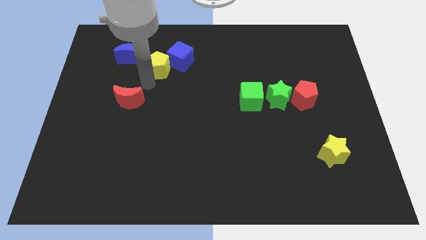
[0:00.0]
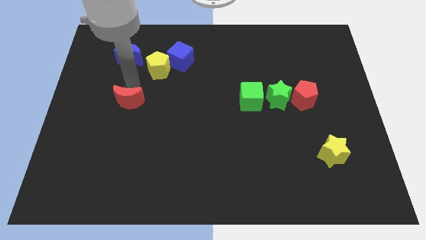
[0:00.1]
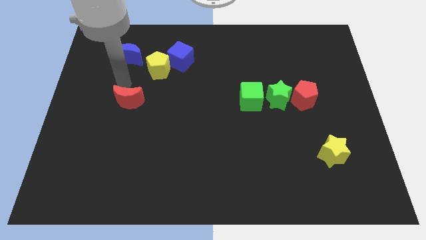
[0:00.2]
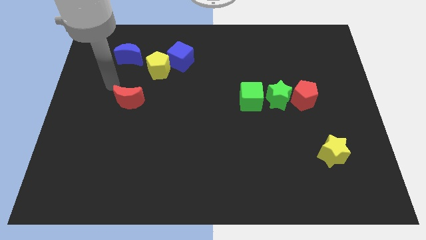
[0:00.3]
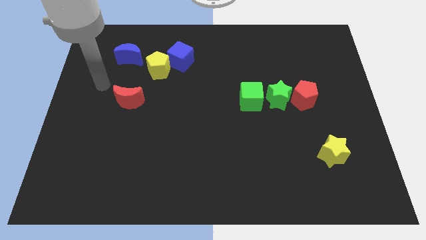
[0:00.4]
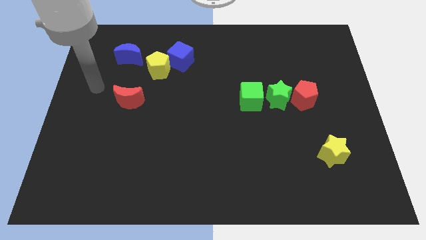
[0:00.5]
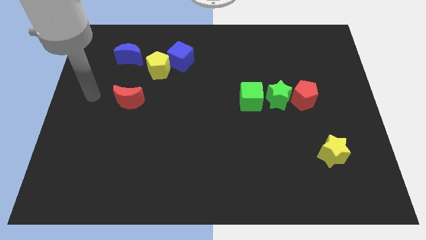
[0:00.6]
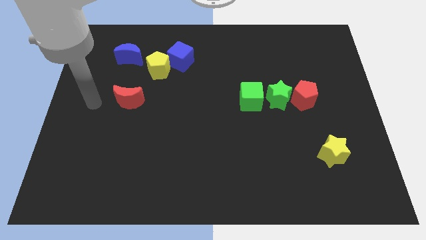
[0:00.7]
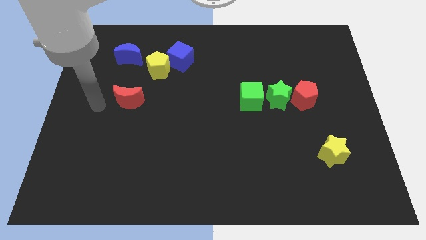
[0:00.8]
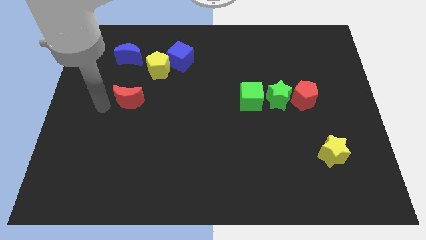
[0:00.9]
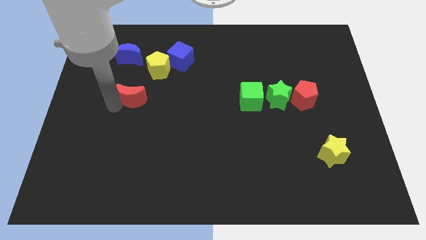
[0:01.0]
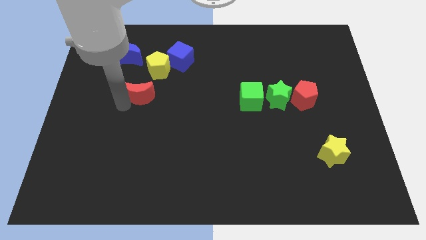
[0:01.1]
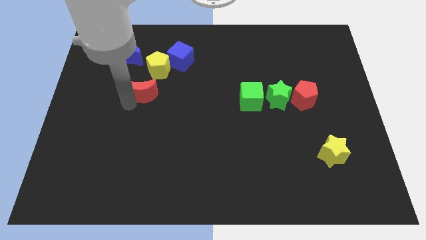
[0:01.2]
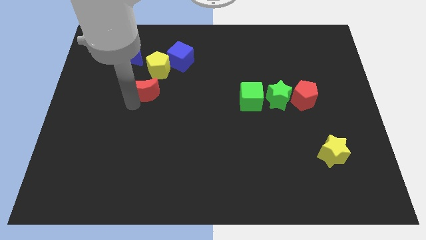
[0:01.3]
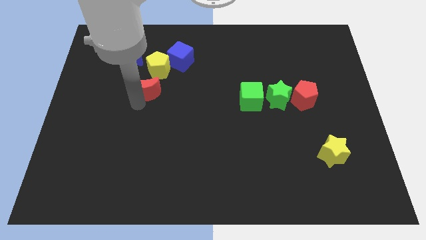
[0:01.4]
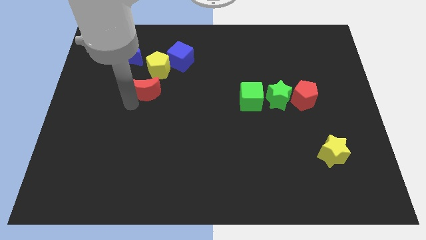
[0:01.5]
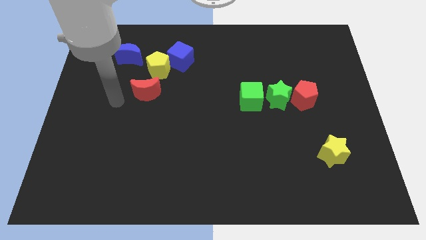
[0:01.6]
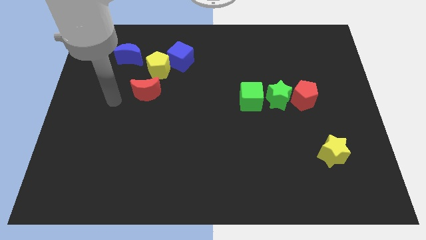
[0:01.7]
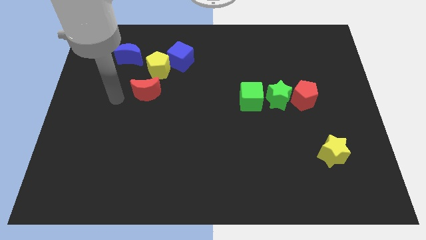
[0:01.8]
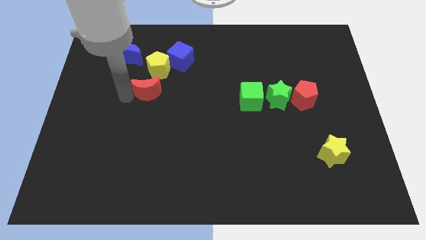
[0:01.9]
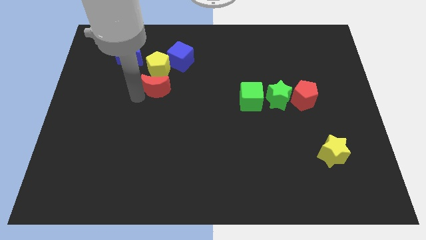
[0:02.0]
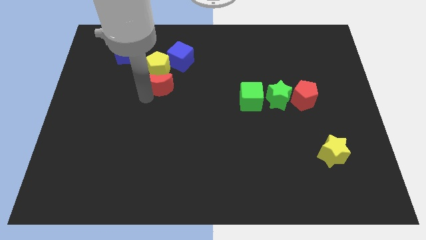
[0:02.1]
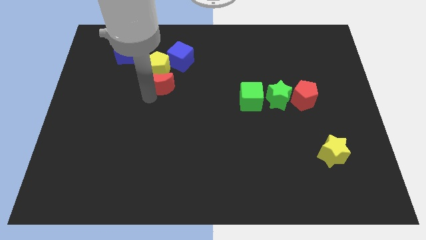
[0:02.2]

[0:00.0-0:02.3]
move the red moon below of the yellow pentagon

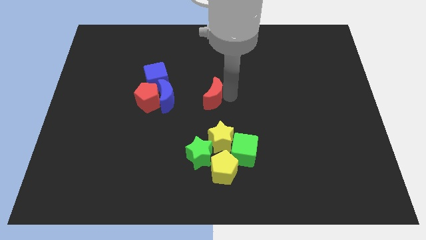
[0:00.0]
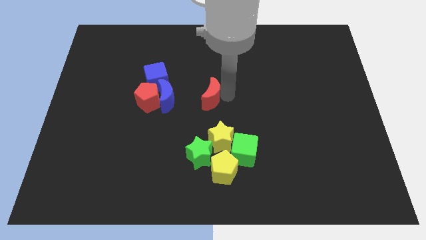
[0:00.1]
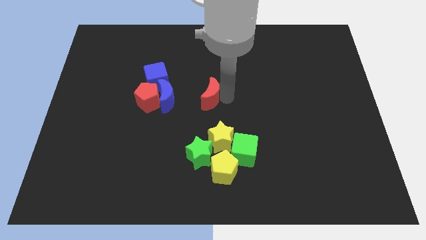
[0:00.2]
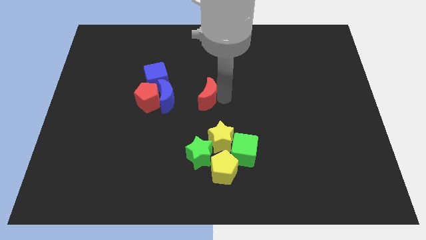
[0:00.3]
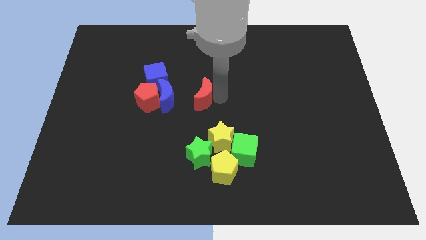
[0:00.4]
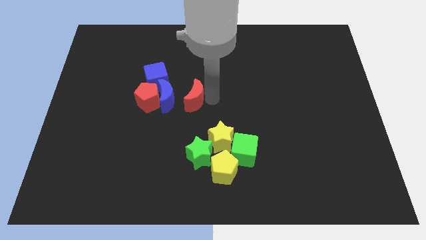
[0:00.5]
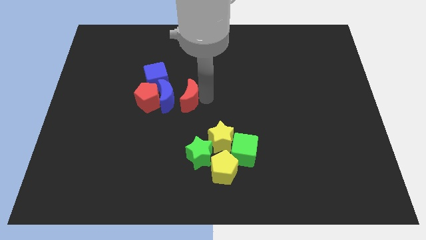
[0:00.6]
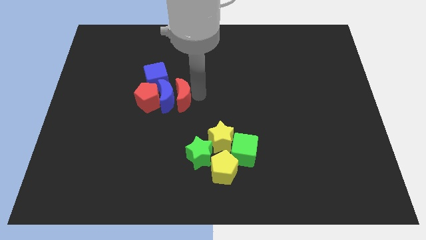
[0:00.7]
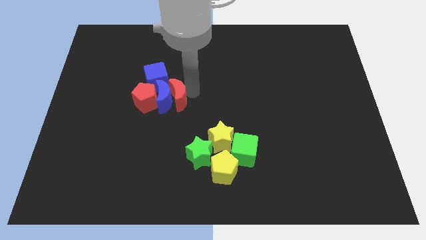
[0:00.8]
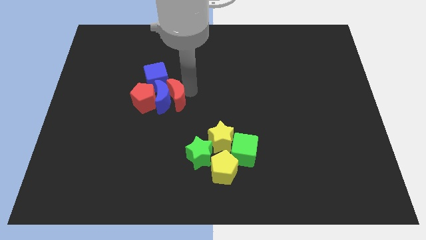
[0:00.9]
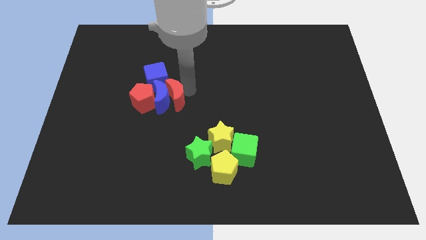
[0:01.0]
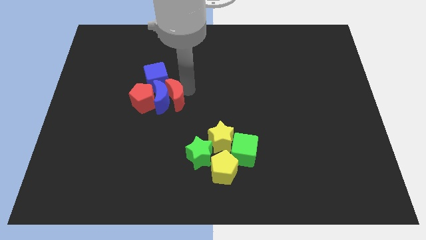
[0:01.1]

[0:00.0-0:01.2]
push the red crescent into the blue crescent

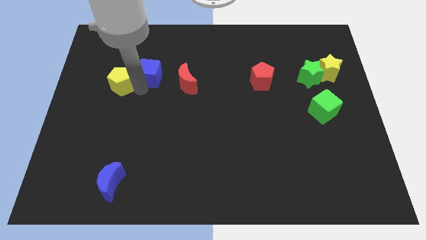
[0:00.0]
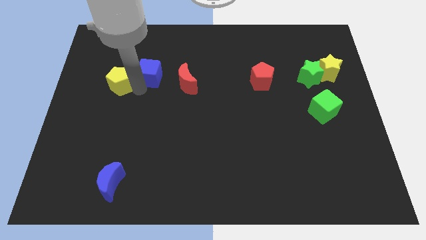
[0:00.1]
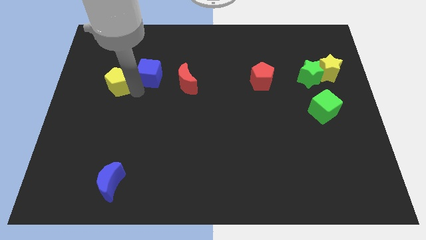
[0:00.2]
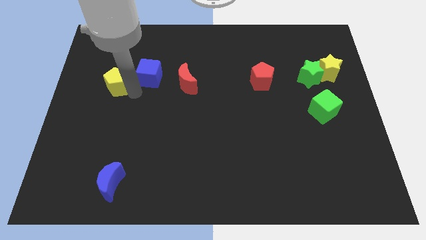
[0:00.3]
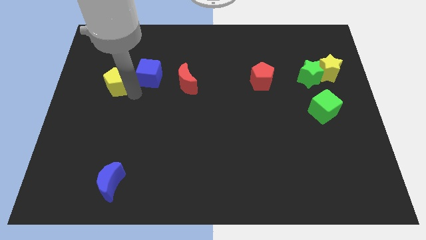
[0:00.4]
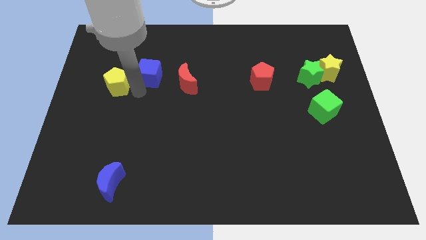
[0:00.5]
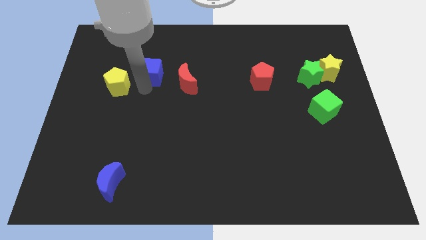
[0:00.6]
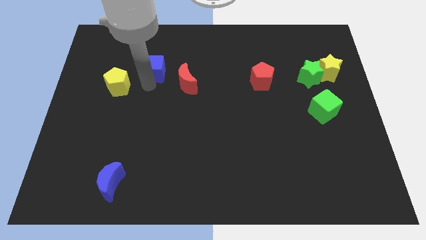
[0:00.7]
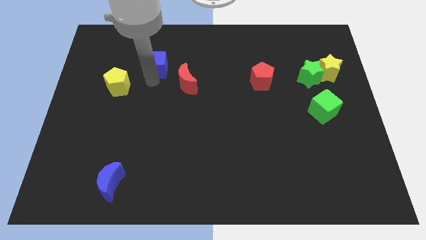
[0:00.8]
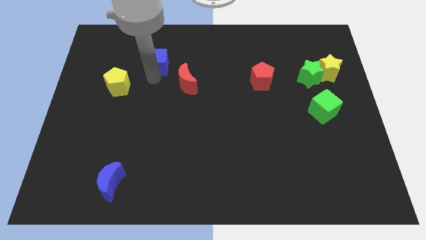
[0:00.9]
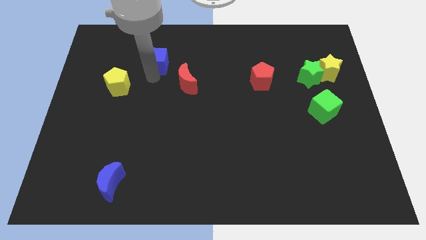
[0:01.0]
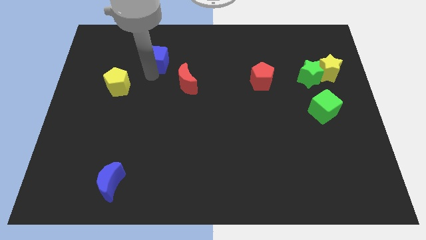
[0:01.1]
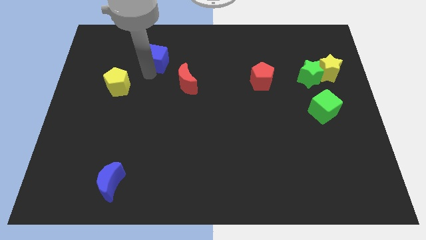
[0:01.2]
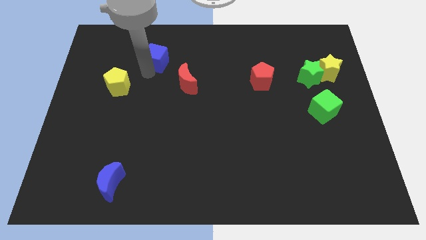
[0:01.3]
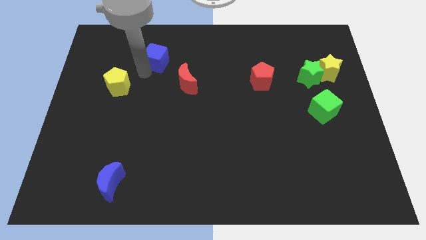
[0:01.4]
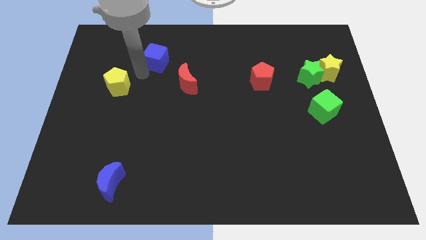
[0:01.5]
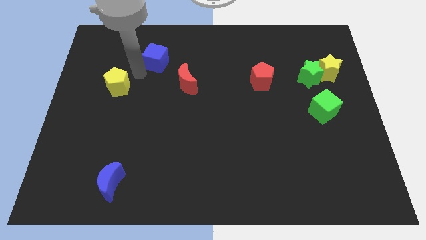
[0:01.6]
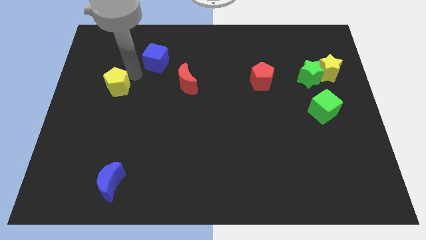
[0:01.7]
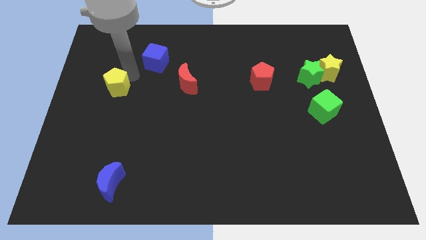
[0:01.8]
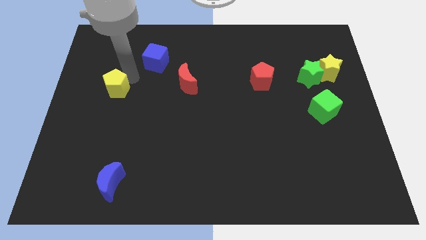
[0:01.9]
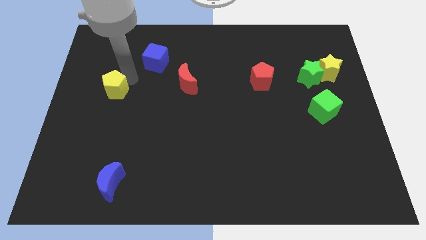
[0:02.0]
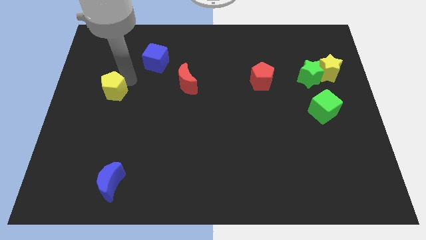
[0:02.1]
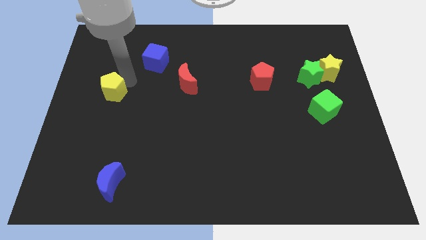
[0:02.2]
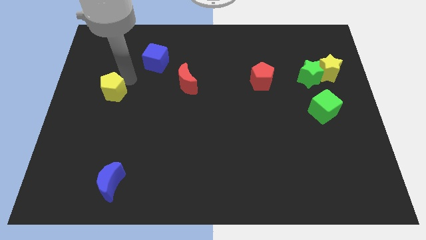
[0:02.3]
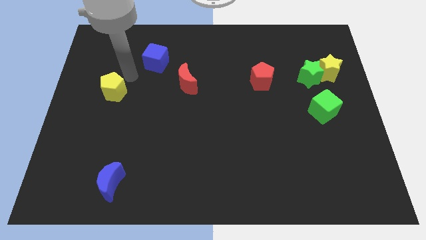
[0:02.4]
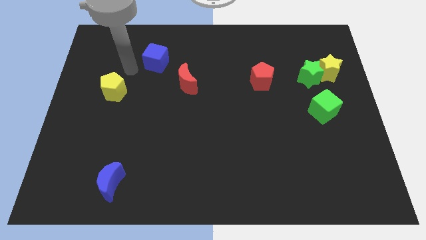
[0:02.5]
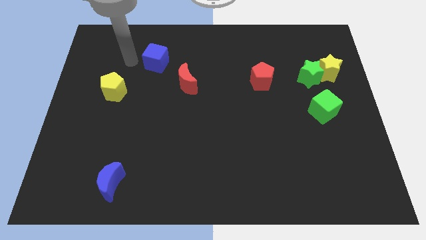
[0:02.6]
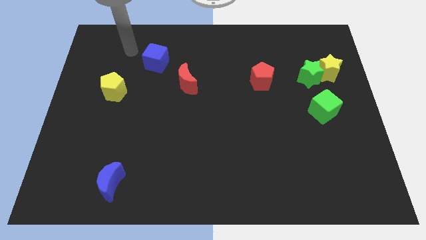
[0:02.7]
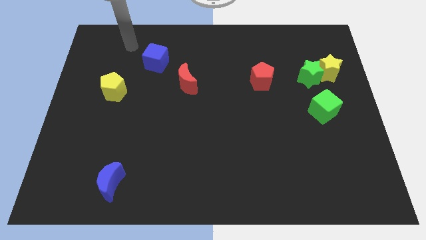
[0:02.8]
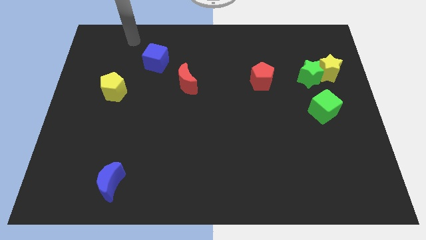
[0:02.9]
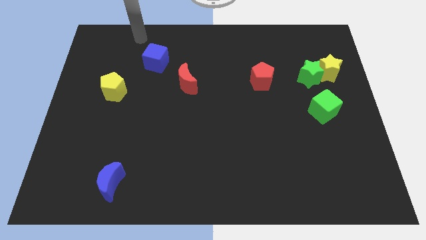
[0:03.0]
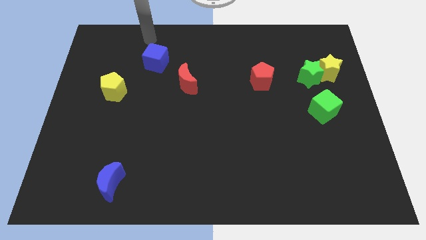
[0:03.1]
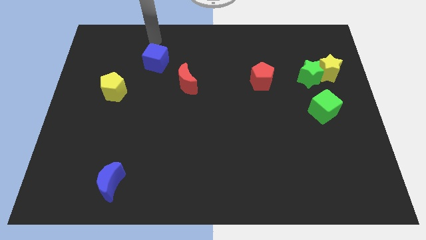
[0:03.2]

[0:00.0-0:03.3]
separate yellow pentagon from blue cube

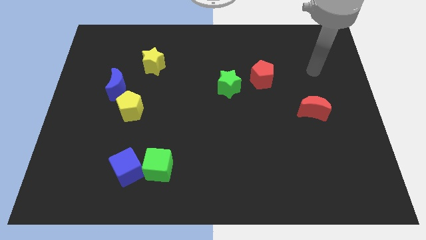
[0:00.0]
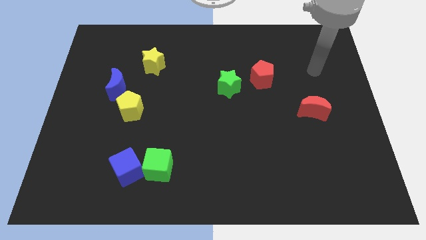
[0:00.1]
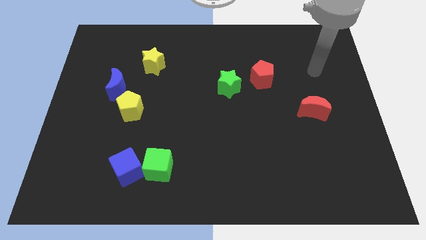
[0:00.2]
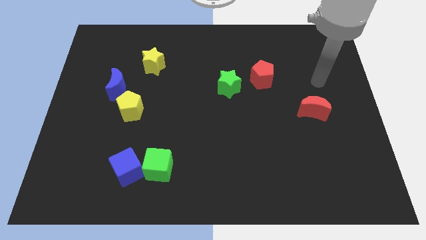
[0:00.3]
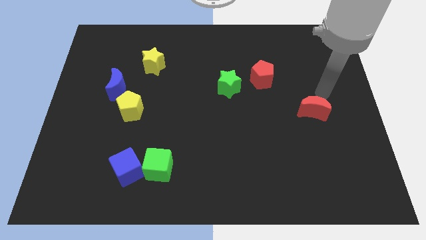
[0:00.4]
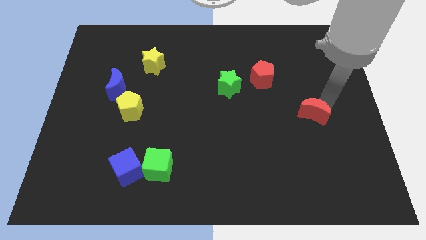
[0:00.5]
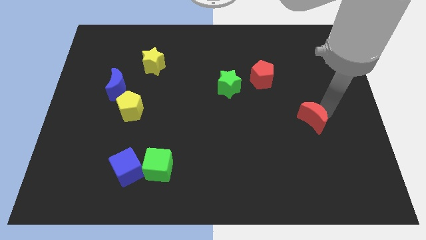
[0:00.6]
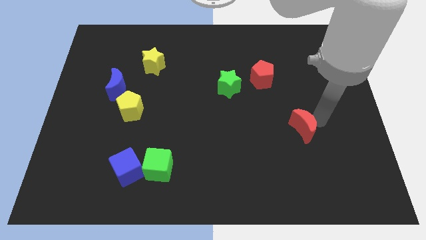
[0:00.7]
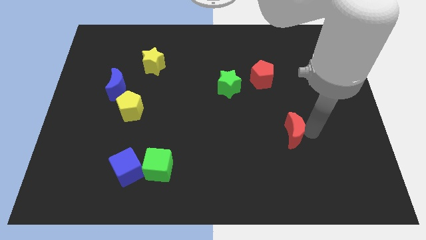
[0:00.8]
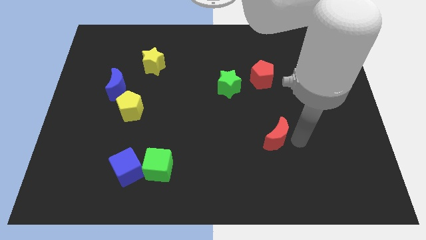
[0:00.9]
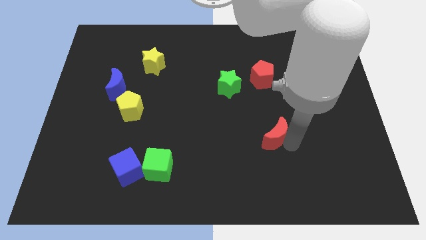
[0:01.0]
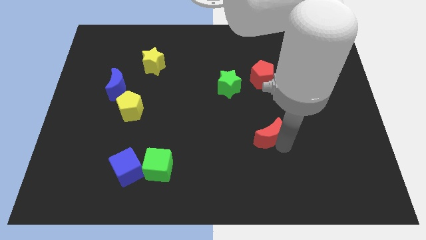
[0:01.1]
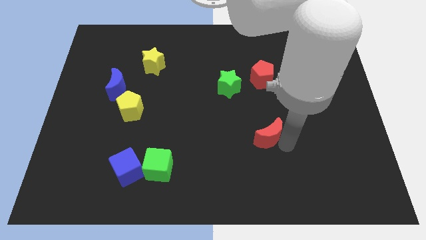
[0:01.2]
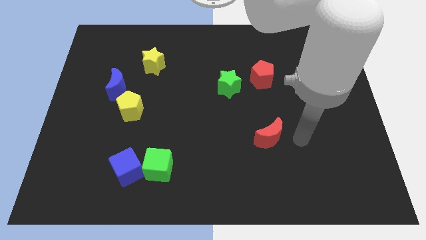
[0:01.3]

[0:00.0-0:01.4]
place the red crescent vertically below the red pentagon

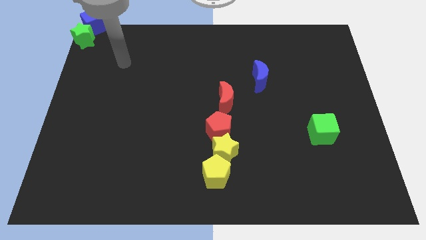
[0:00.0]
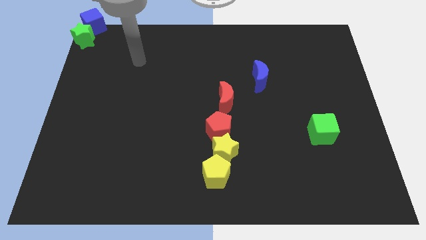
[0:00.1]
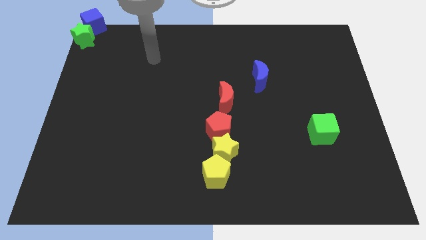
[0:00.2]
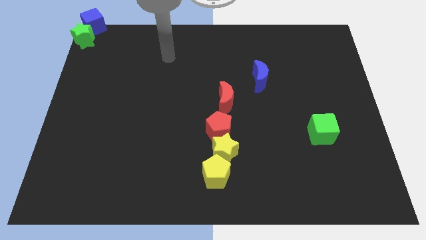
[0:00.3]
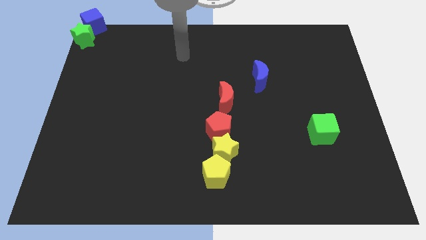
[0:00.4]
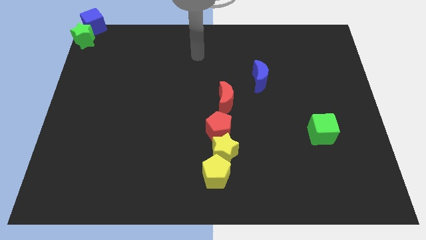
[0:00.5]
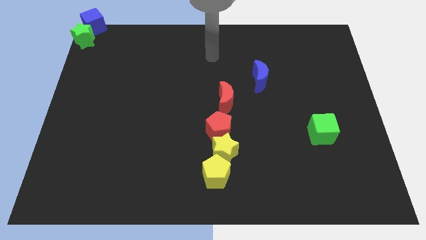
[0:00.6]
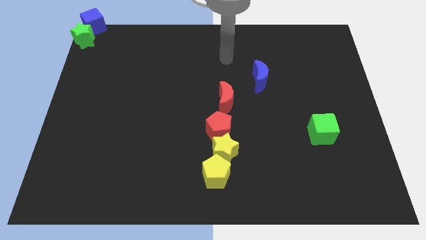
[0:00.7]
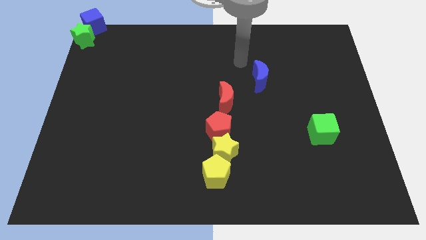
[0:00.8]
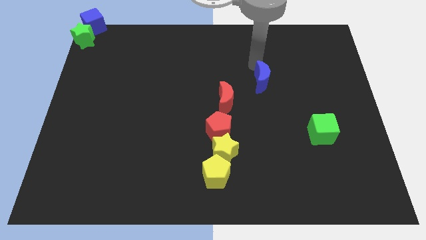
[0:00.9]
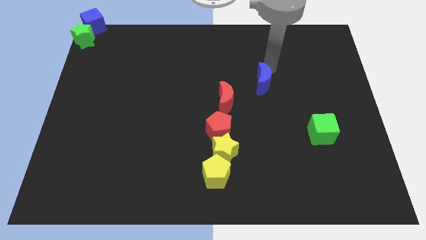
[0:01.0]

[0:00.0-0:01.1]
place your arm above blue crescent
